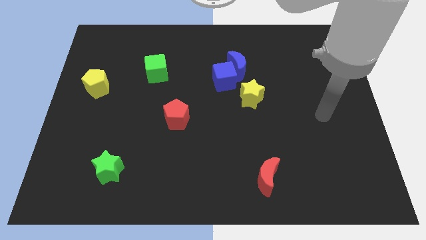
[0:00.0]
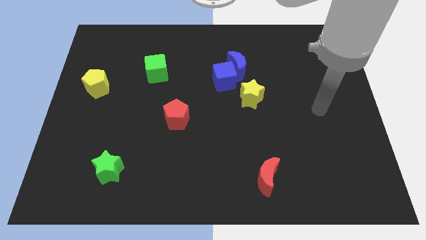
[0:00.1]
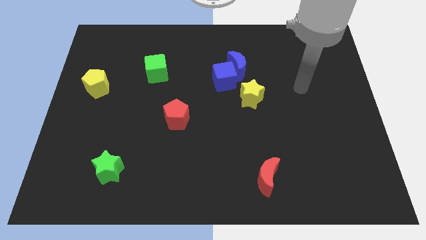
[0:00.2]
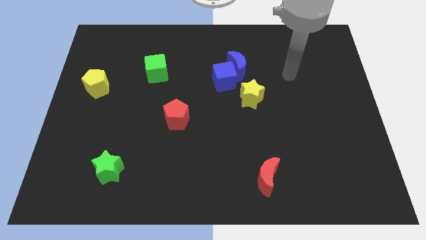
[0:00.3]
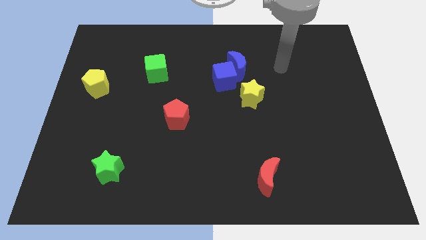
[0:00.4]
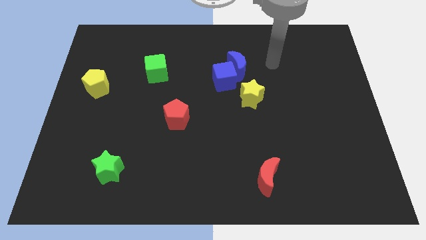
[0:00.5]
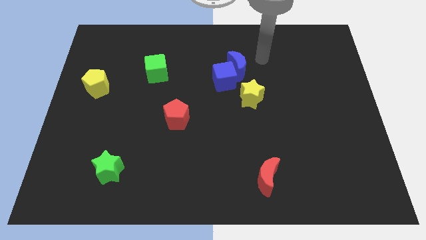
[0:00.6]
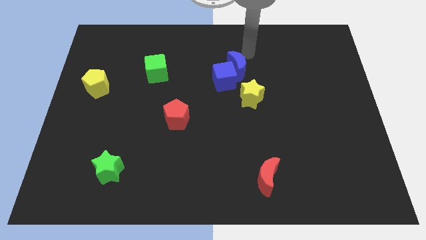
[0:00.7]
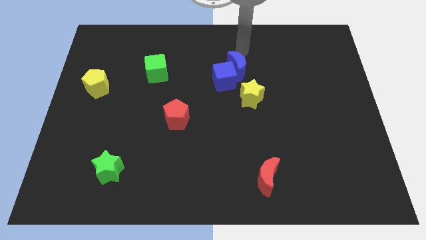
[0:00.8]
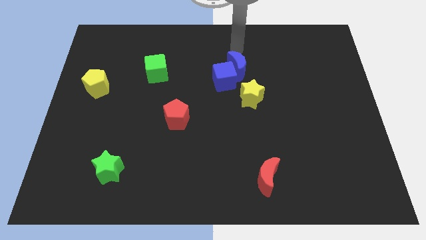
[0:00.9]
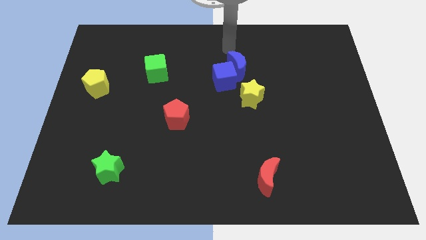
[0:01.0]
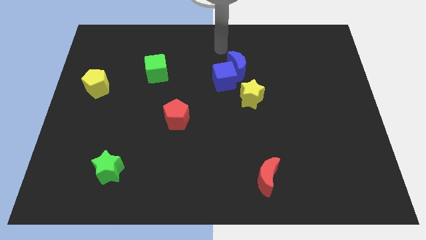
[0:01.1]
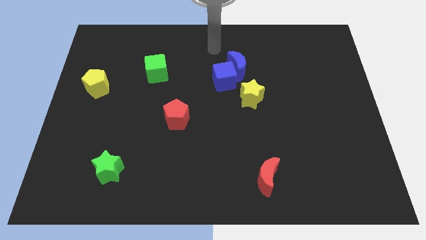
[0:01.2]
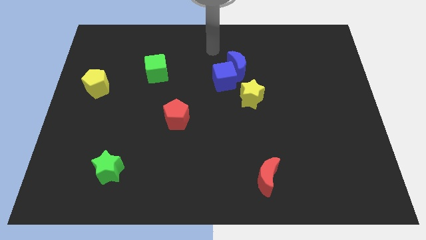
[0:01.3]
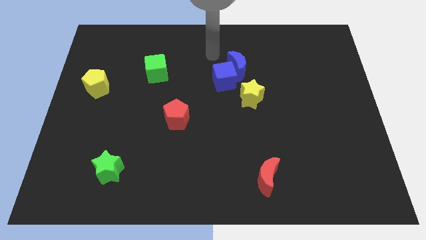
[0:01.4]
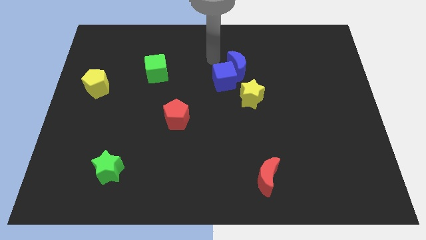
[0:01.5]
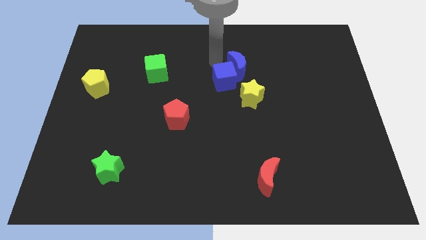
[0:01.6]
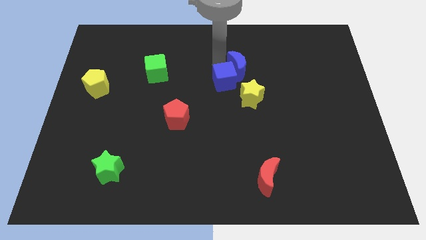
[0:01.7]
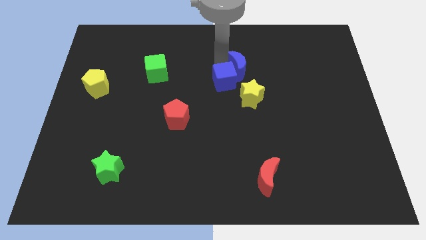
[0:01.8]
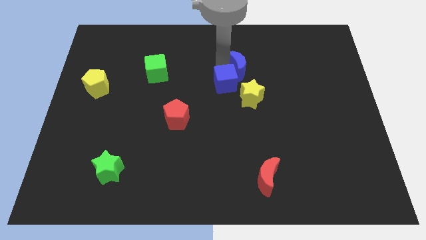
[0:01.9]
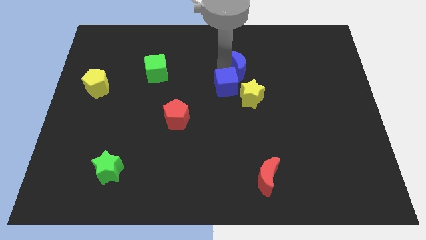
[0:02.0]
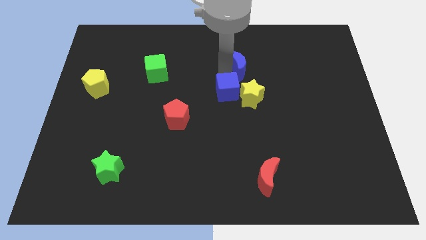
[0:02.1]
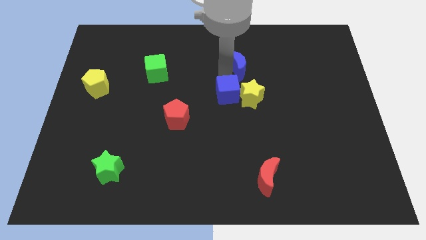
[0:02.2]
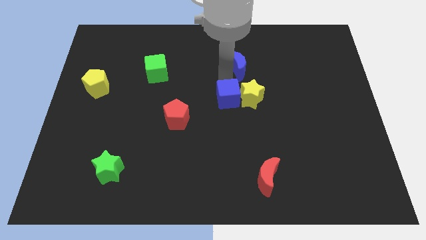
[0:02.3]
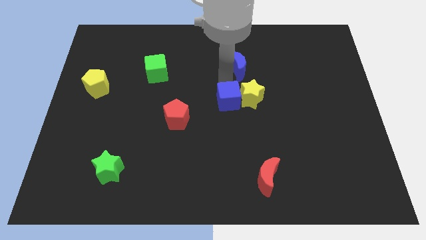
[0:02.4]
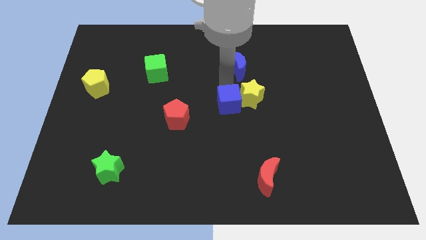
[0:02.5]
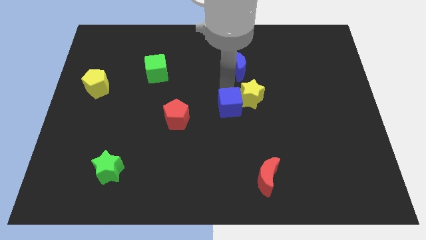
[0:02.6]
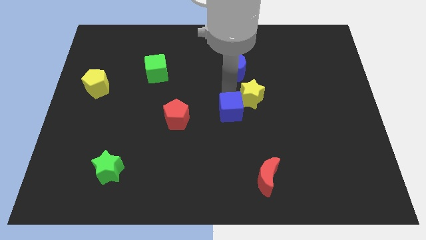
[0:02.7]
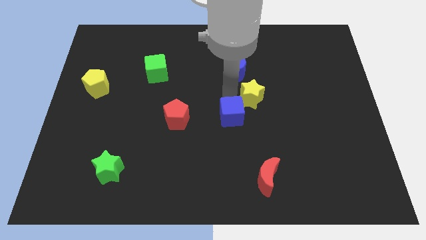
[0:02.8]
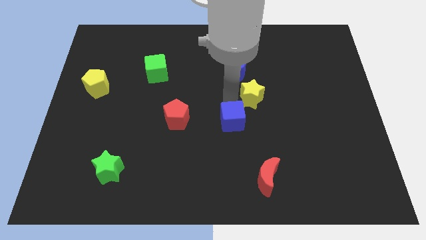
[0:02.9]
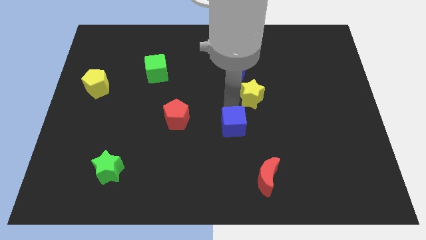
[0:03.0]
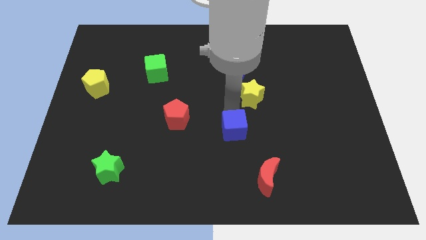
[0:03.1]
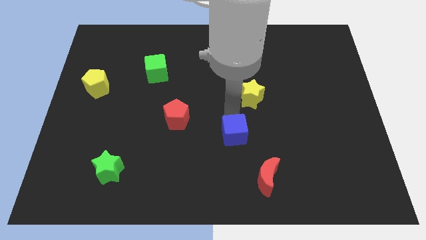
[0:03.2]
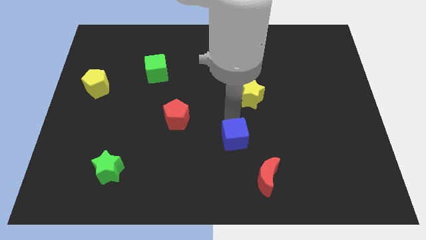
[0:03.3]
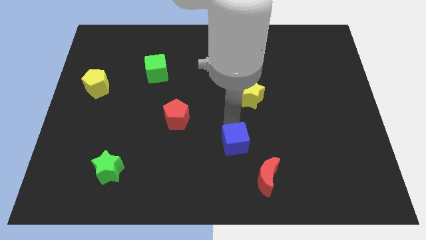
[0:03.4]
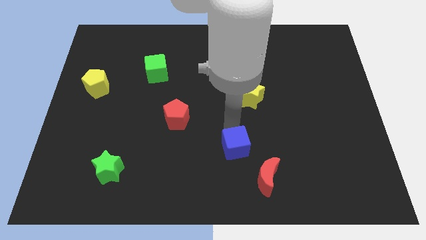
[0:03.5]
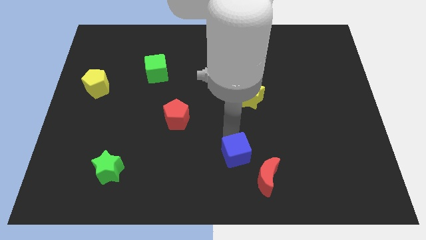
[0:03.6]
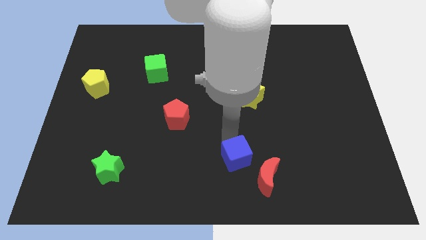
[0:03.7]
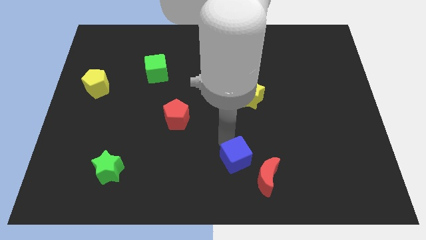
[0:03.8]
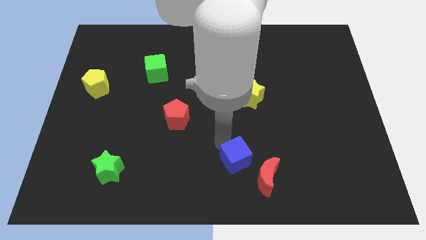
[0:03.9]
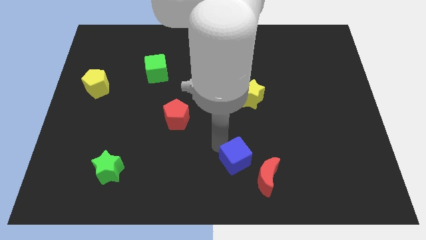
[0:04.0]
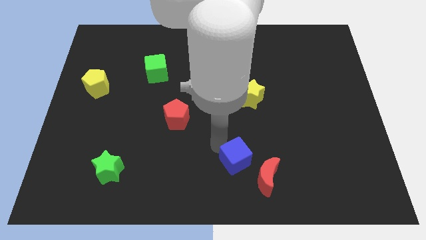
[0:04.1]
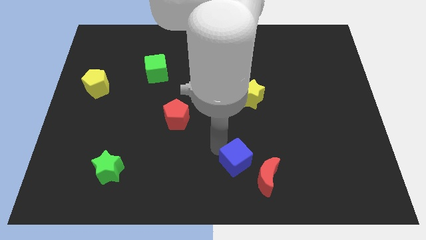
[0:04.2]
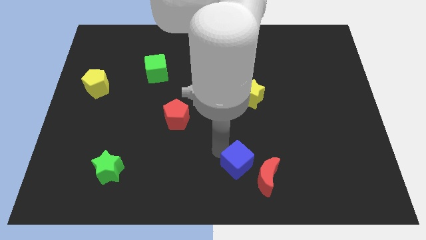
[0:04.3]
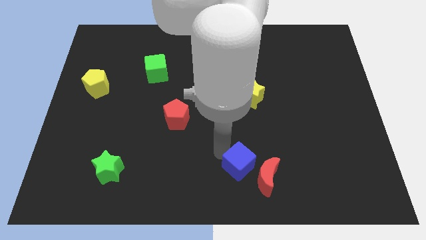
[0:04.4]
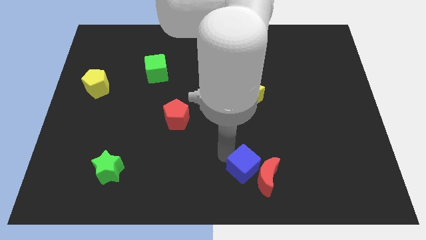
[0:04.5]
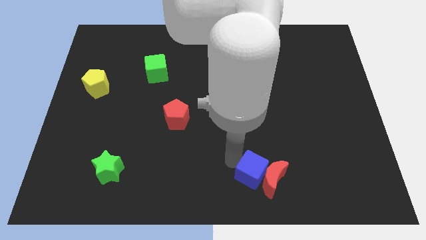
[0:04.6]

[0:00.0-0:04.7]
push the blue cube to the red moon

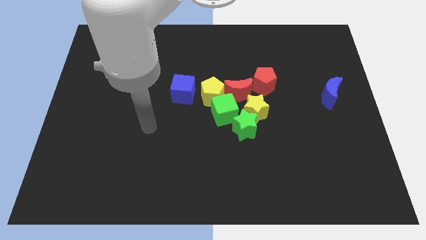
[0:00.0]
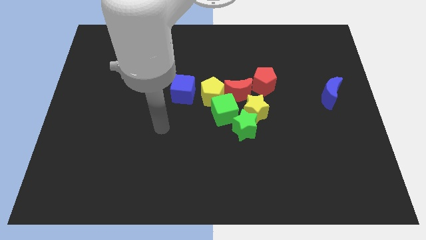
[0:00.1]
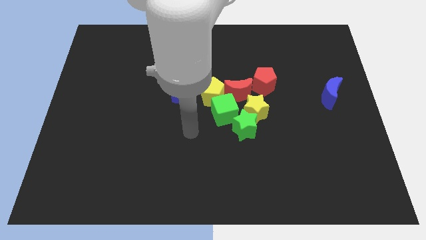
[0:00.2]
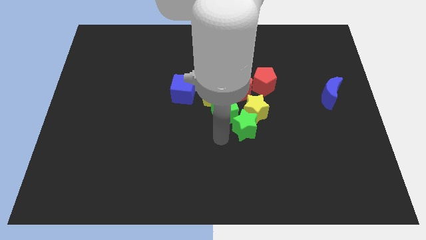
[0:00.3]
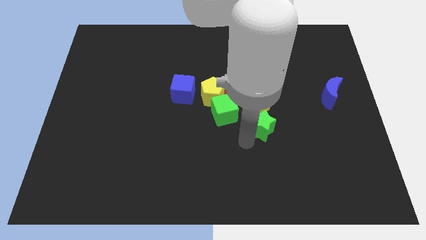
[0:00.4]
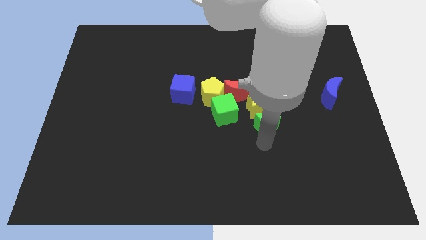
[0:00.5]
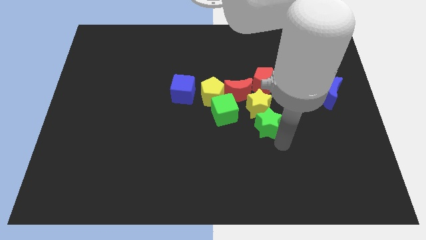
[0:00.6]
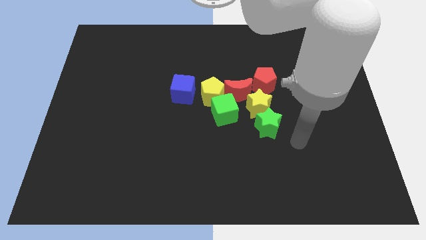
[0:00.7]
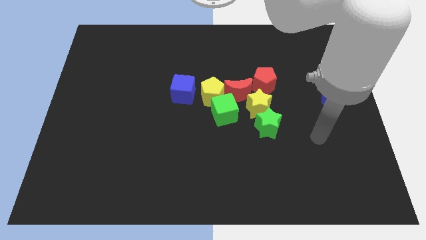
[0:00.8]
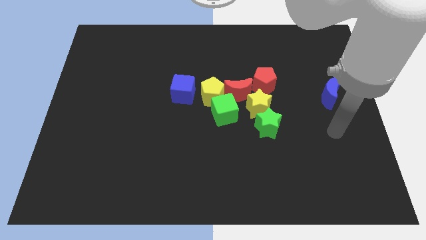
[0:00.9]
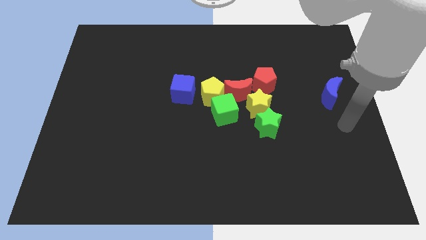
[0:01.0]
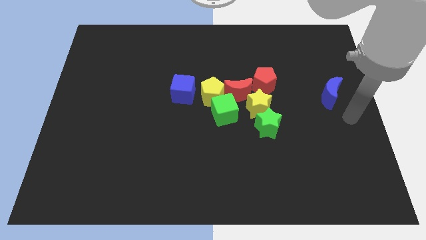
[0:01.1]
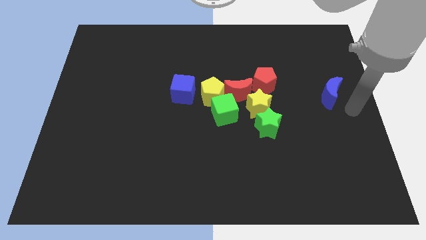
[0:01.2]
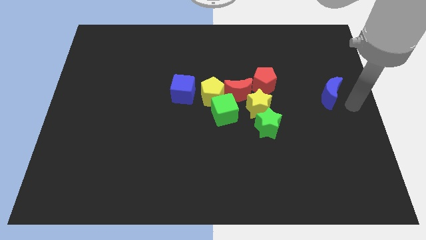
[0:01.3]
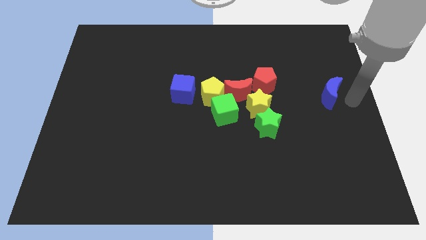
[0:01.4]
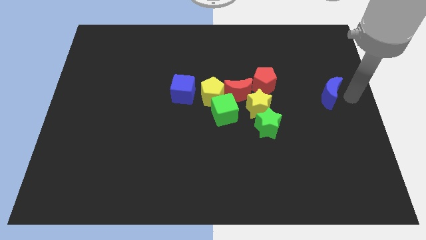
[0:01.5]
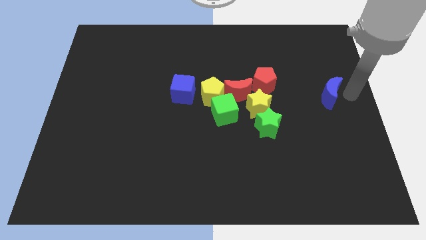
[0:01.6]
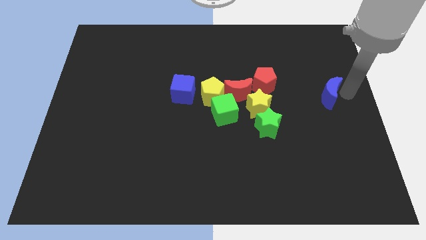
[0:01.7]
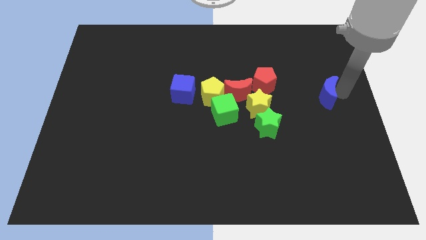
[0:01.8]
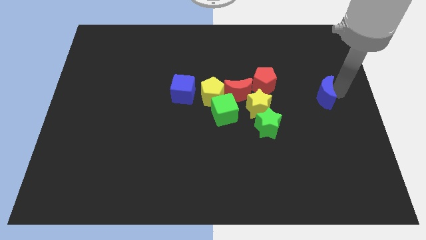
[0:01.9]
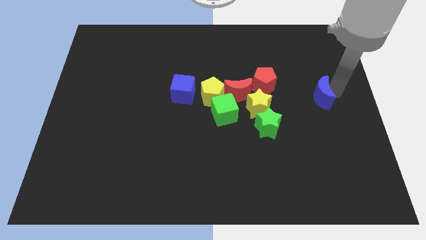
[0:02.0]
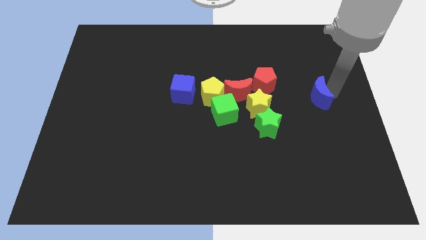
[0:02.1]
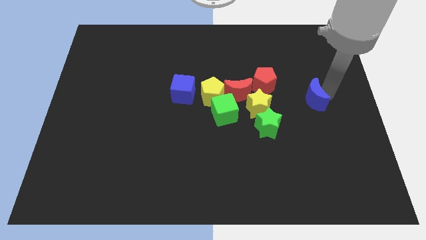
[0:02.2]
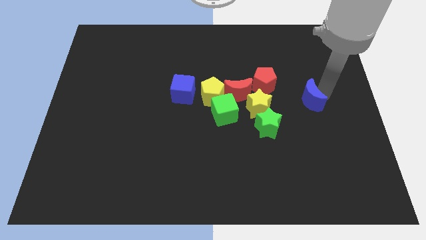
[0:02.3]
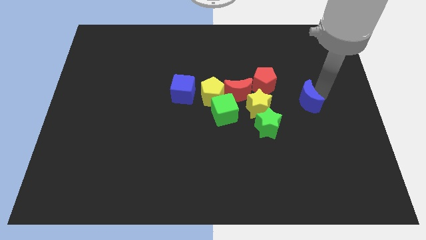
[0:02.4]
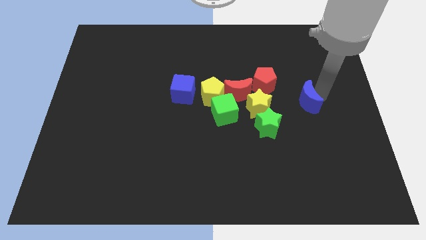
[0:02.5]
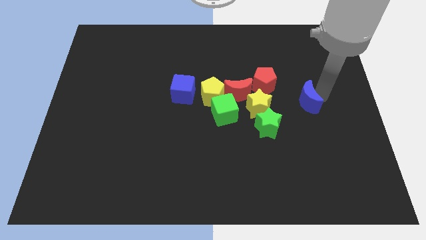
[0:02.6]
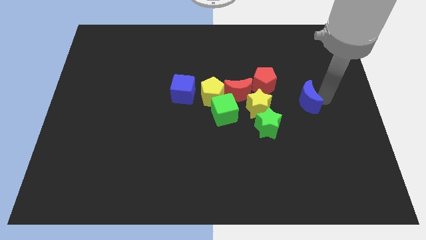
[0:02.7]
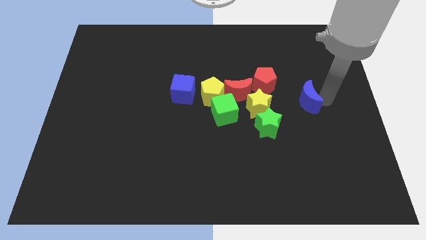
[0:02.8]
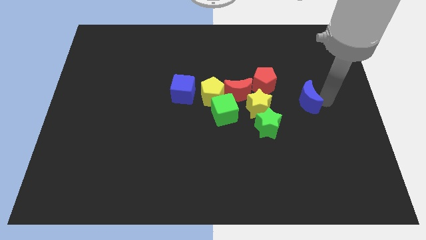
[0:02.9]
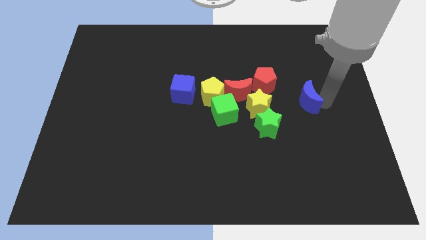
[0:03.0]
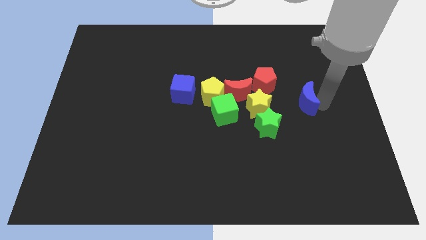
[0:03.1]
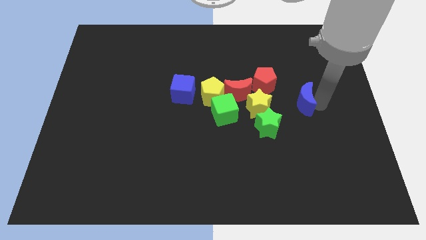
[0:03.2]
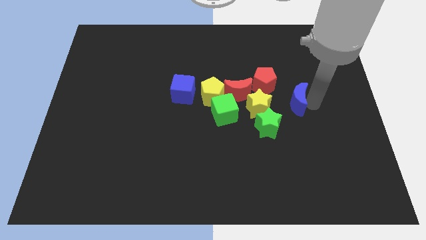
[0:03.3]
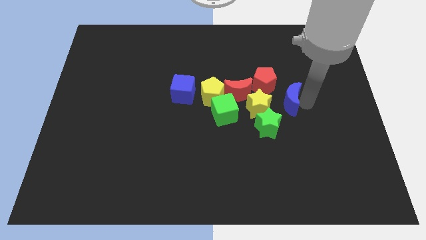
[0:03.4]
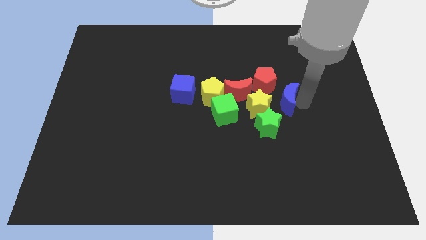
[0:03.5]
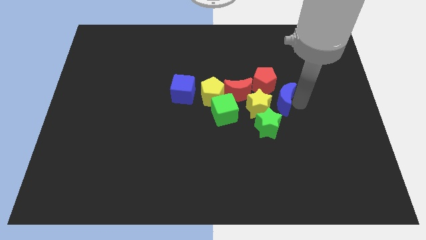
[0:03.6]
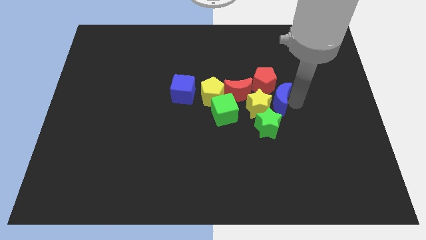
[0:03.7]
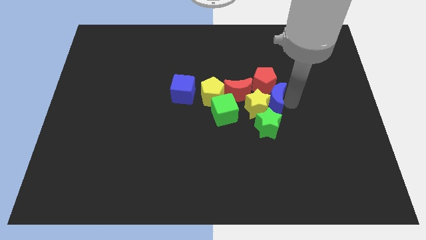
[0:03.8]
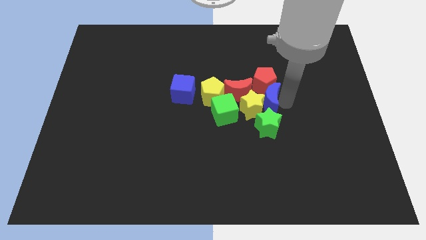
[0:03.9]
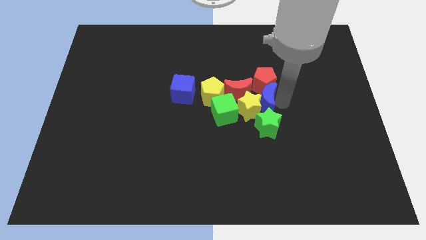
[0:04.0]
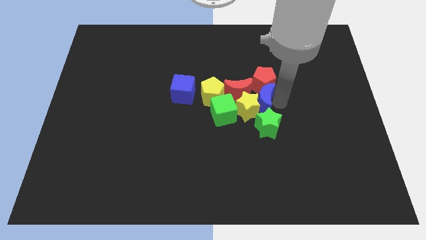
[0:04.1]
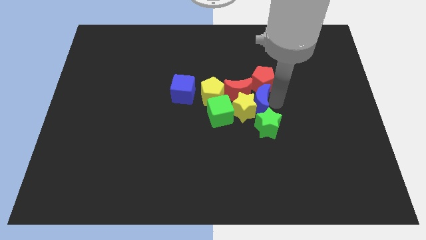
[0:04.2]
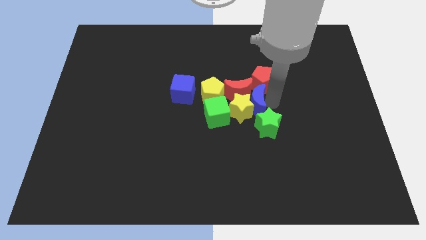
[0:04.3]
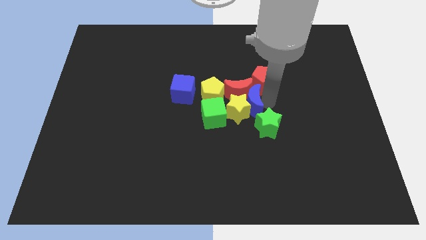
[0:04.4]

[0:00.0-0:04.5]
move the blue moon towards the red moon
